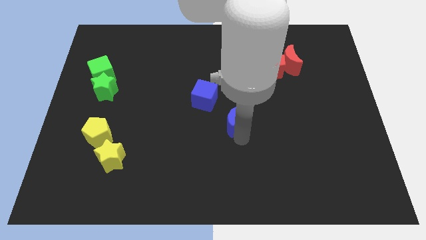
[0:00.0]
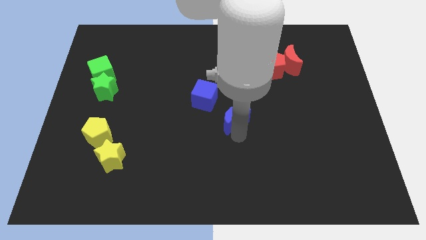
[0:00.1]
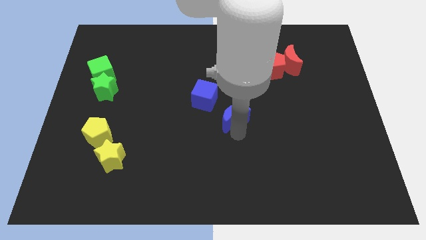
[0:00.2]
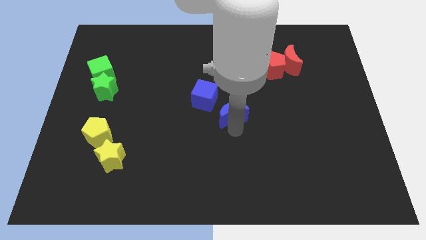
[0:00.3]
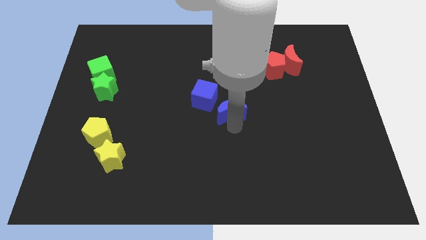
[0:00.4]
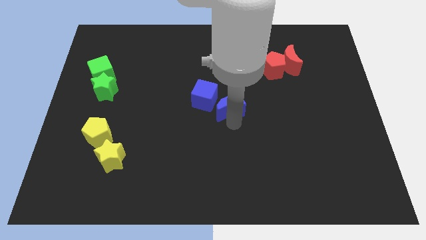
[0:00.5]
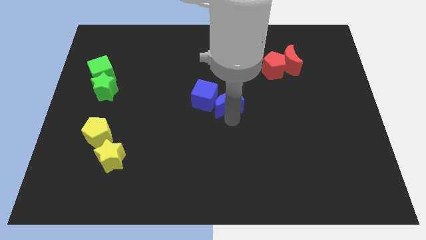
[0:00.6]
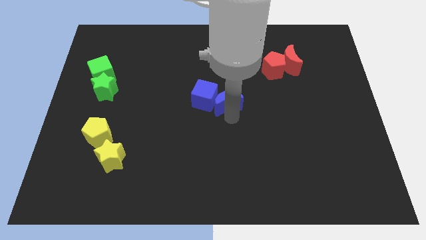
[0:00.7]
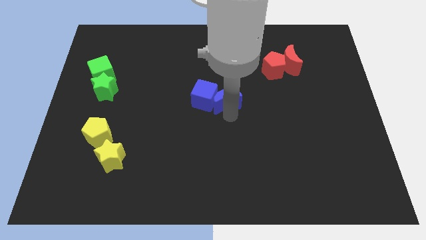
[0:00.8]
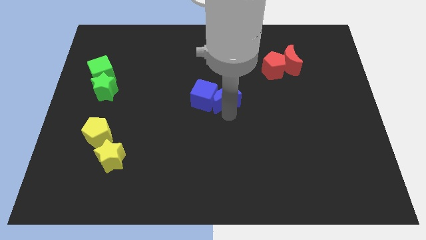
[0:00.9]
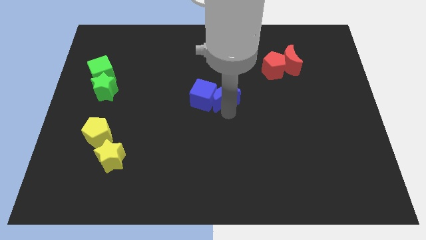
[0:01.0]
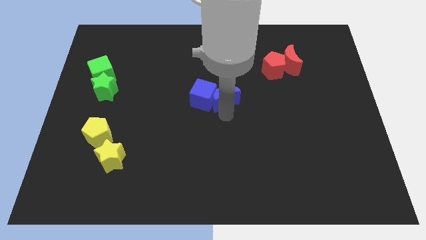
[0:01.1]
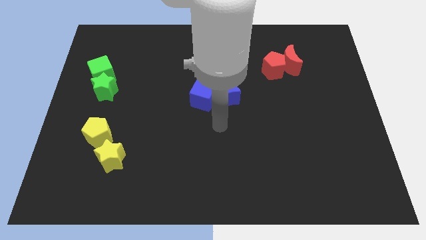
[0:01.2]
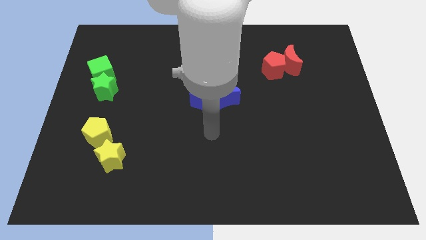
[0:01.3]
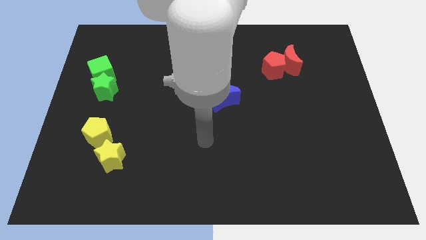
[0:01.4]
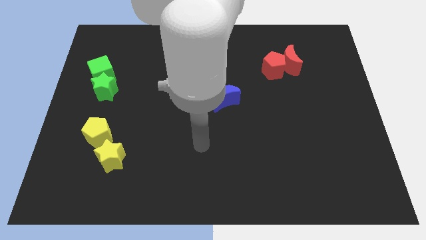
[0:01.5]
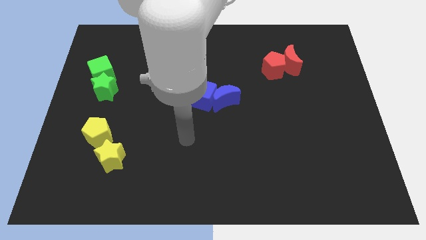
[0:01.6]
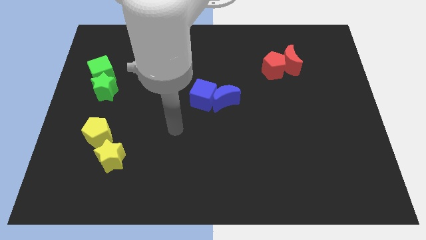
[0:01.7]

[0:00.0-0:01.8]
place the blue moon at the right side of the blue cube

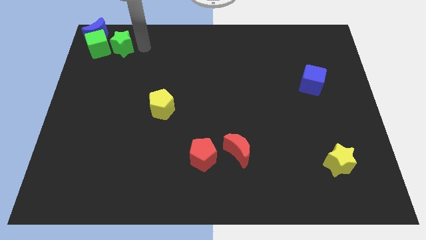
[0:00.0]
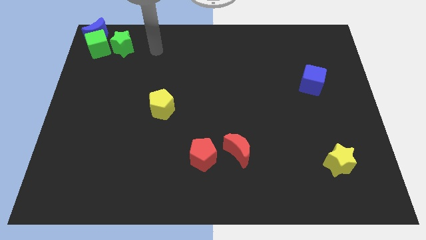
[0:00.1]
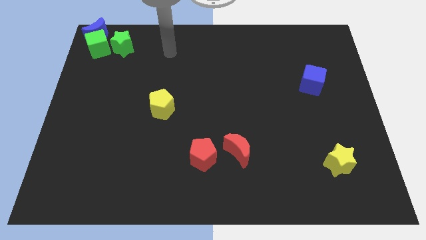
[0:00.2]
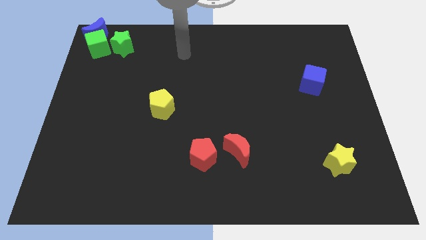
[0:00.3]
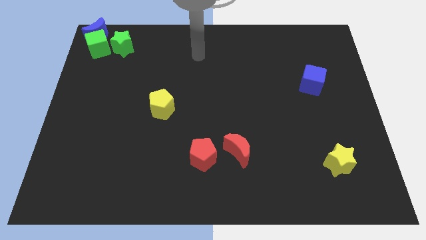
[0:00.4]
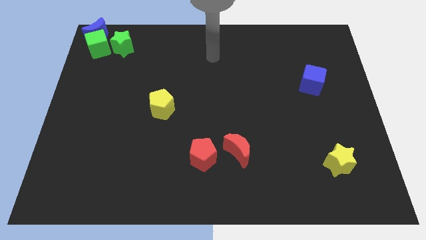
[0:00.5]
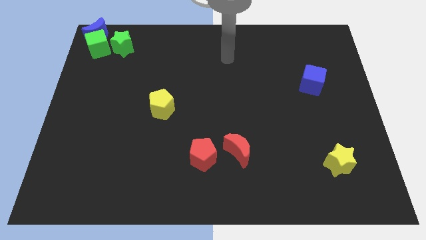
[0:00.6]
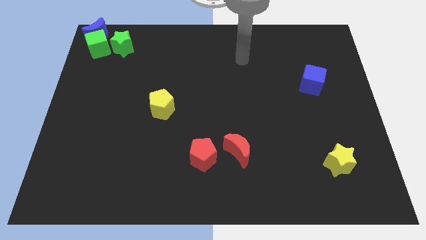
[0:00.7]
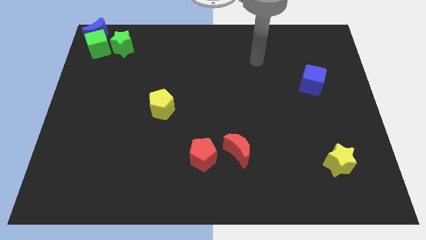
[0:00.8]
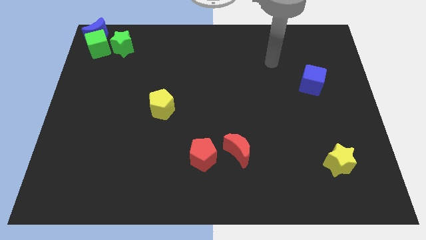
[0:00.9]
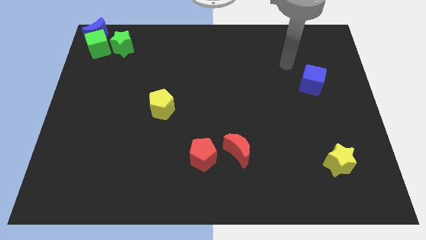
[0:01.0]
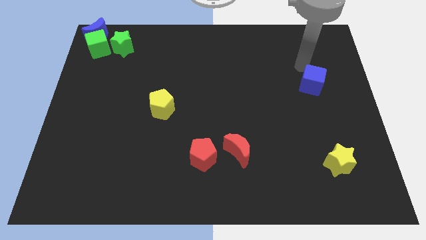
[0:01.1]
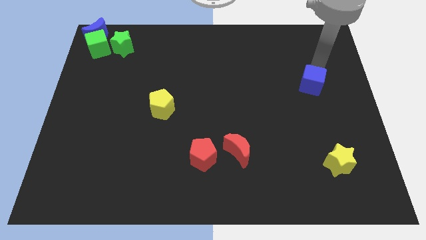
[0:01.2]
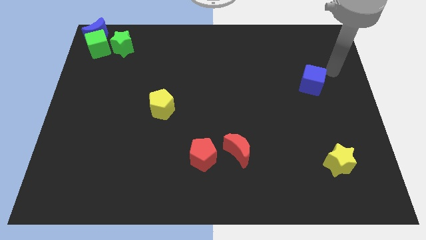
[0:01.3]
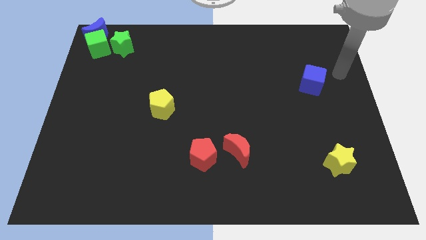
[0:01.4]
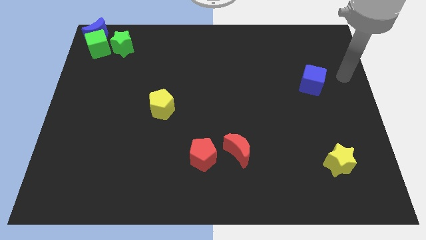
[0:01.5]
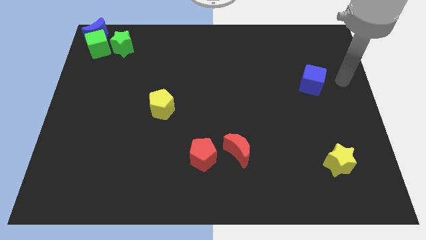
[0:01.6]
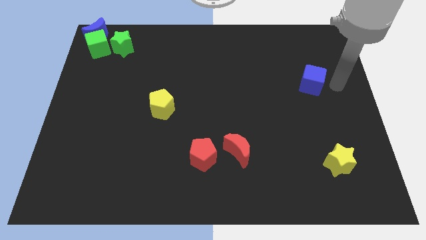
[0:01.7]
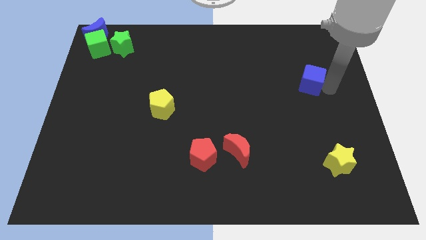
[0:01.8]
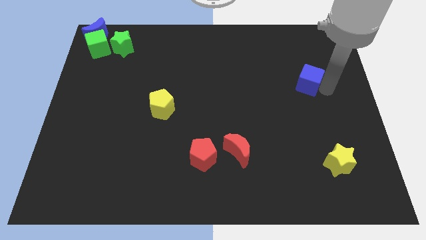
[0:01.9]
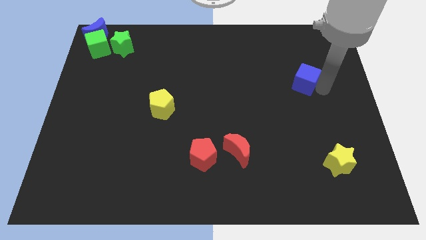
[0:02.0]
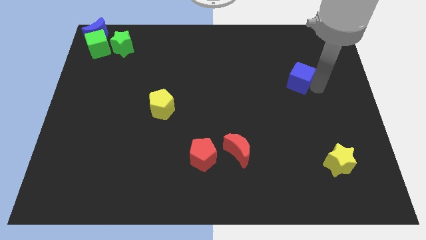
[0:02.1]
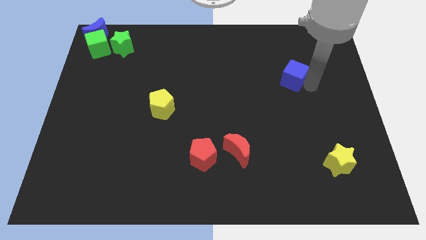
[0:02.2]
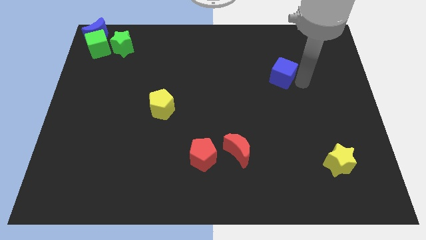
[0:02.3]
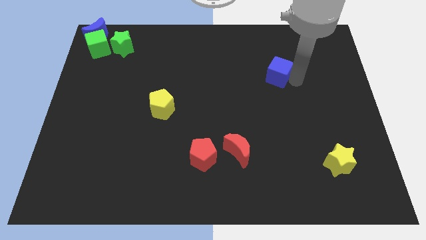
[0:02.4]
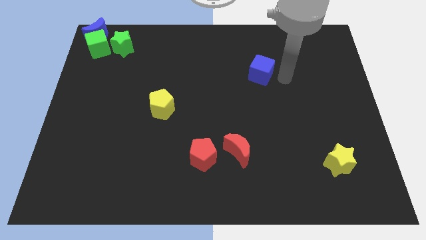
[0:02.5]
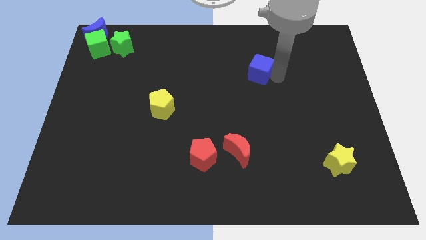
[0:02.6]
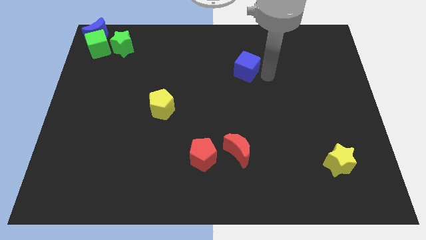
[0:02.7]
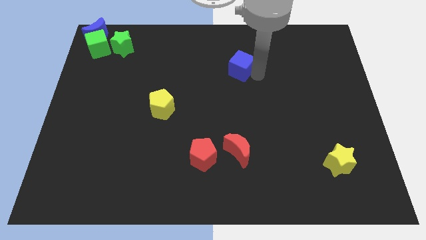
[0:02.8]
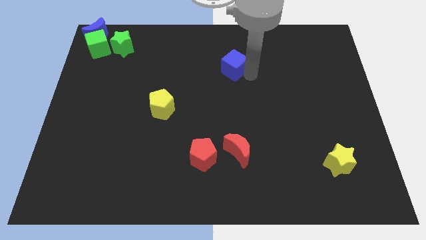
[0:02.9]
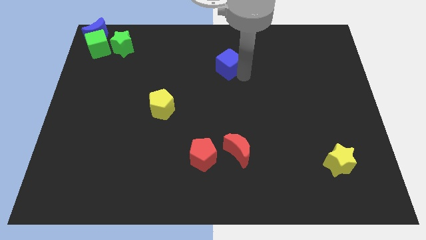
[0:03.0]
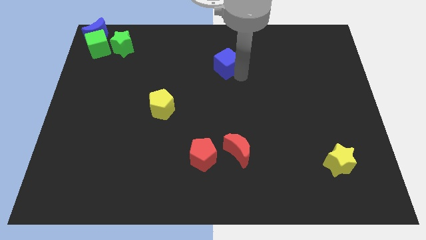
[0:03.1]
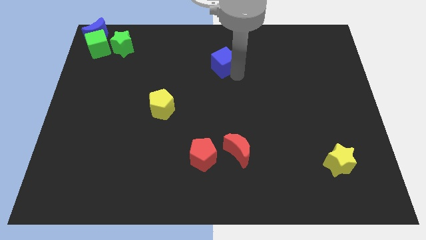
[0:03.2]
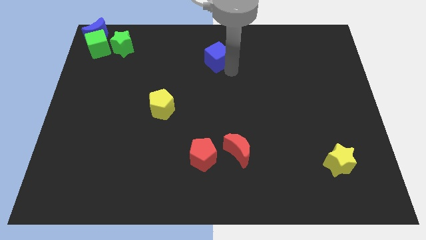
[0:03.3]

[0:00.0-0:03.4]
move the blue cube to the top center of the board

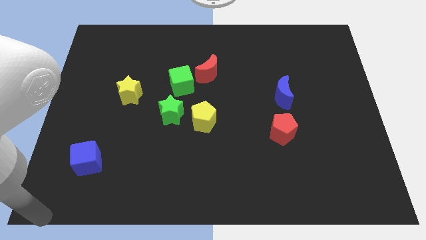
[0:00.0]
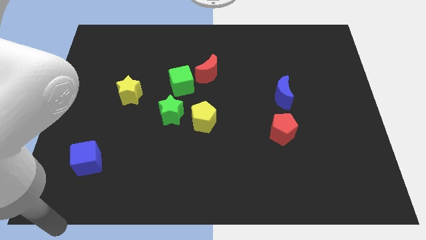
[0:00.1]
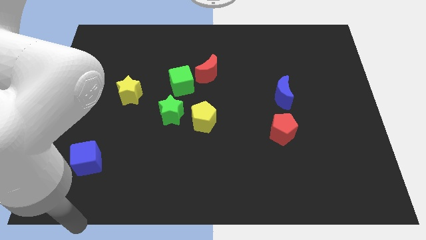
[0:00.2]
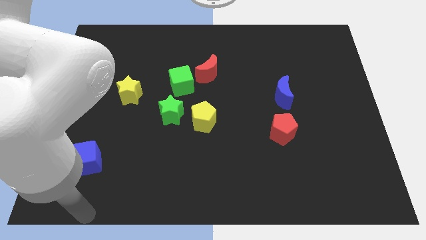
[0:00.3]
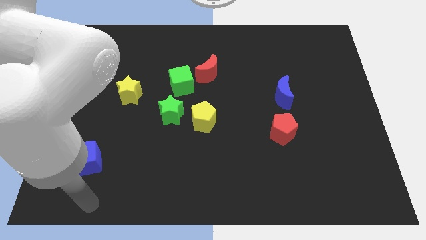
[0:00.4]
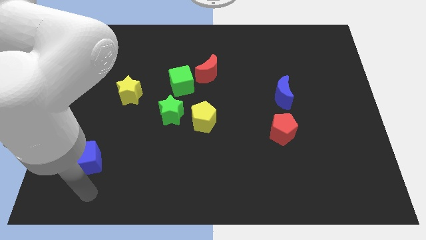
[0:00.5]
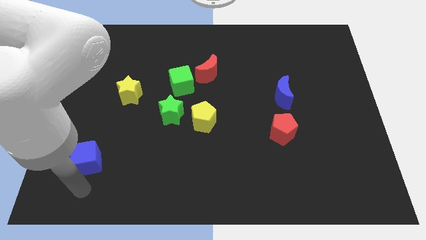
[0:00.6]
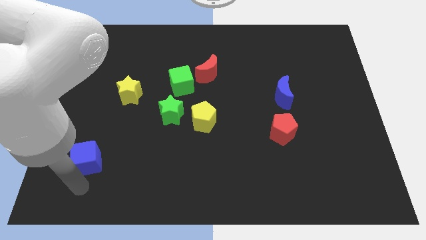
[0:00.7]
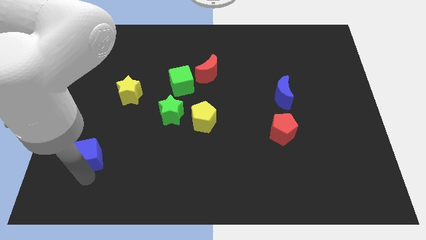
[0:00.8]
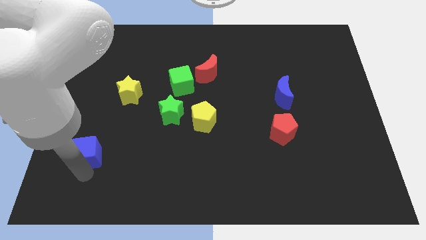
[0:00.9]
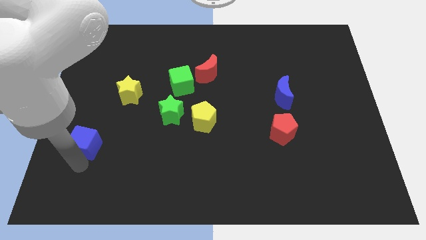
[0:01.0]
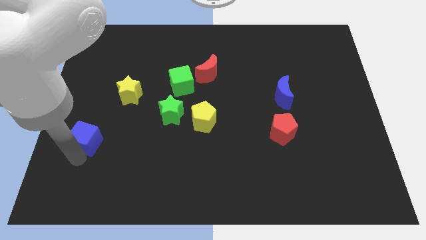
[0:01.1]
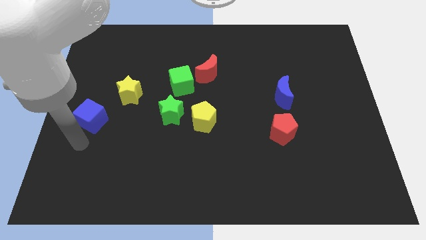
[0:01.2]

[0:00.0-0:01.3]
push the blue cube upwards

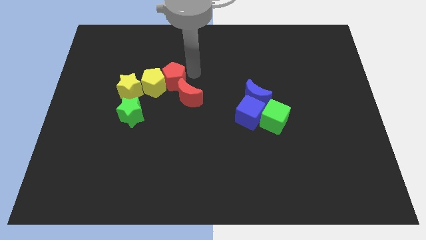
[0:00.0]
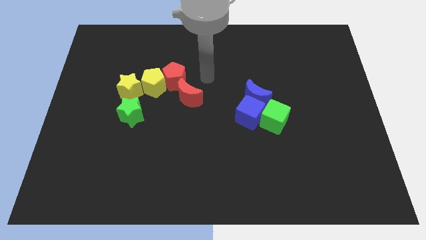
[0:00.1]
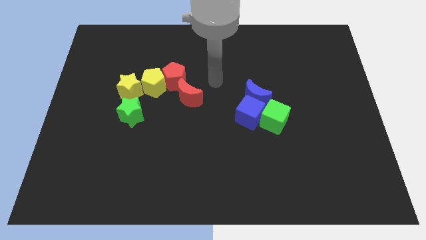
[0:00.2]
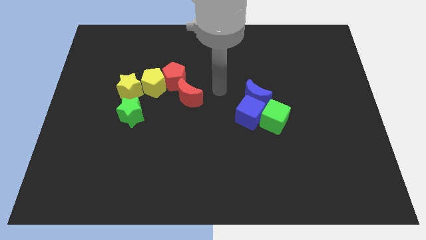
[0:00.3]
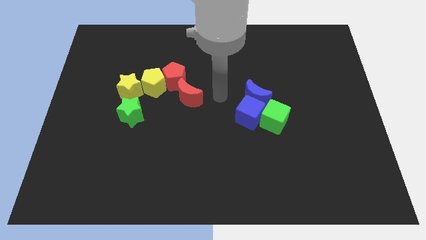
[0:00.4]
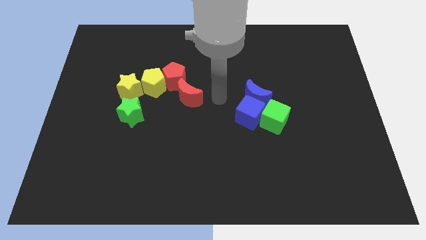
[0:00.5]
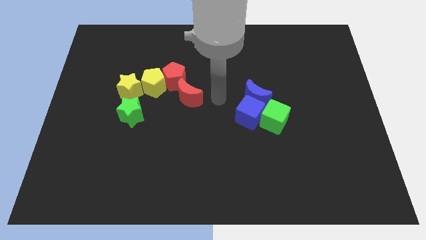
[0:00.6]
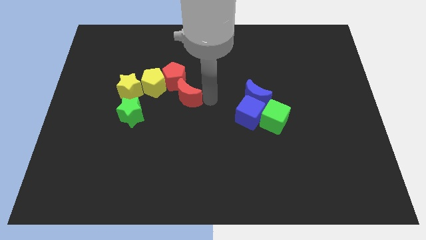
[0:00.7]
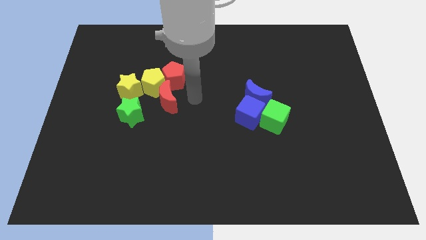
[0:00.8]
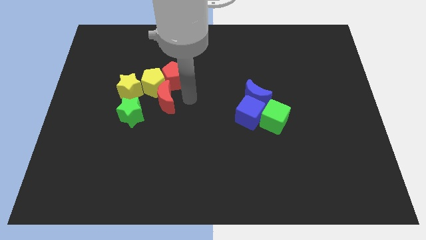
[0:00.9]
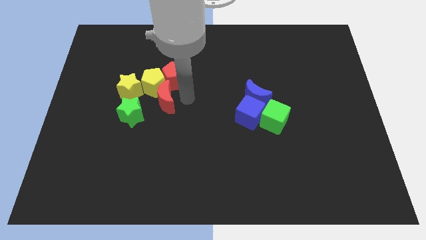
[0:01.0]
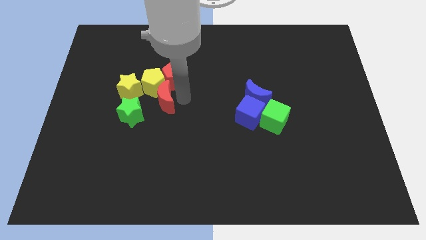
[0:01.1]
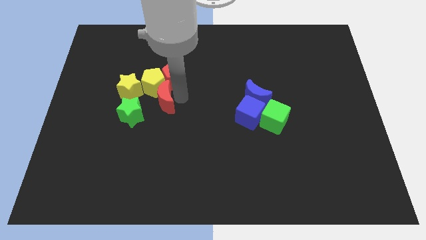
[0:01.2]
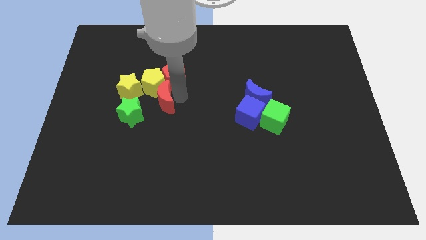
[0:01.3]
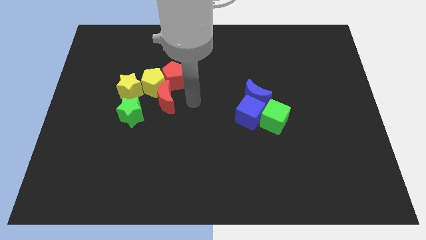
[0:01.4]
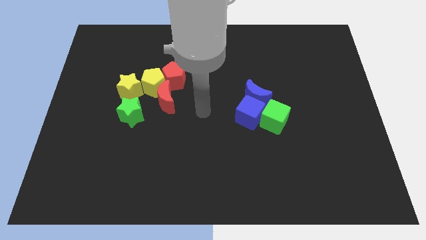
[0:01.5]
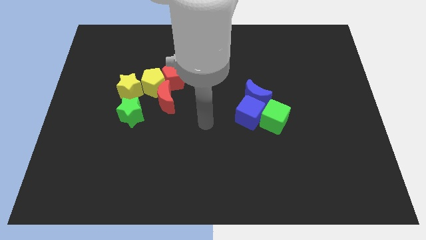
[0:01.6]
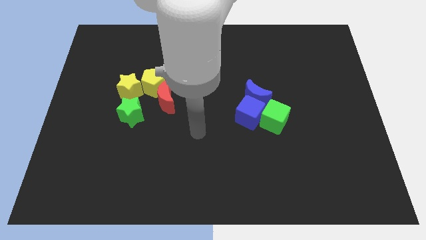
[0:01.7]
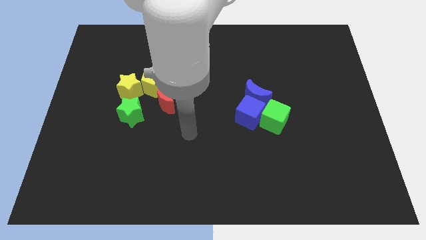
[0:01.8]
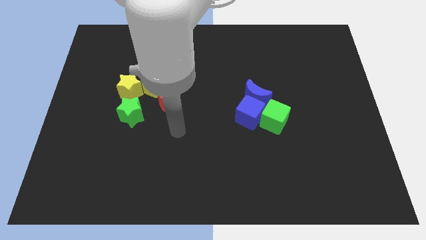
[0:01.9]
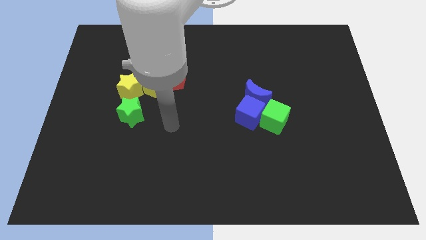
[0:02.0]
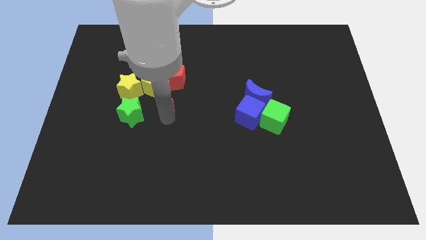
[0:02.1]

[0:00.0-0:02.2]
move the red moon slightly to the left

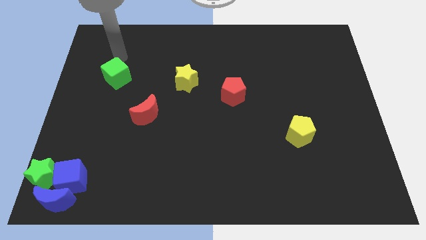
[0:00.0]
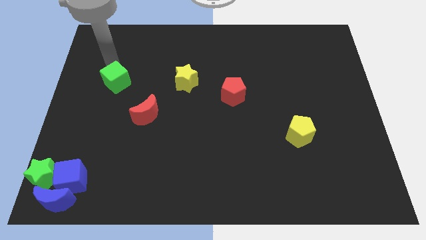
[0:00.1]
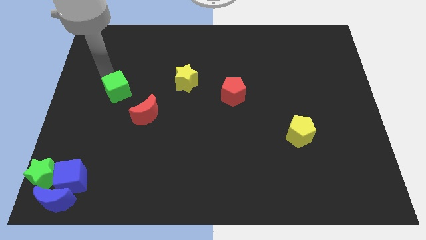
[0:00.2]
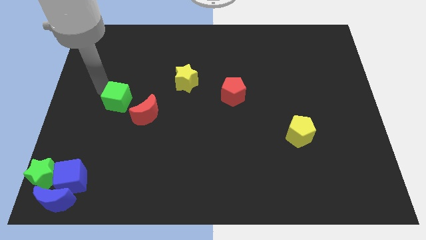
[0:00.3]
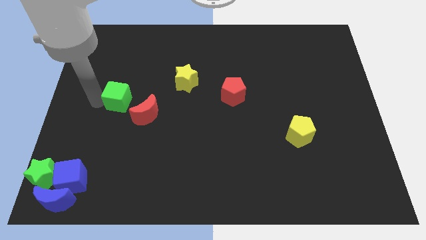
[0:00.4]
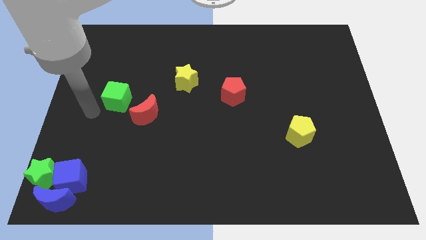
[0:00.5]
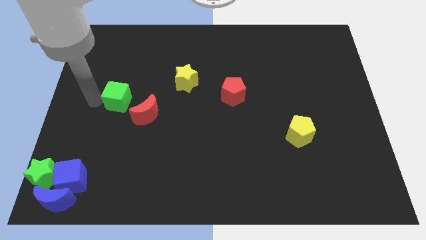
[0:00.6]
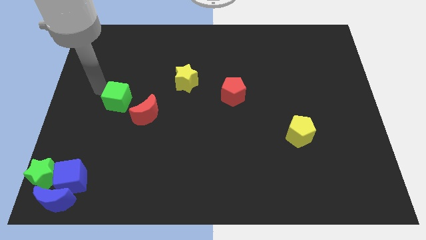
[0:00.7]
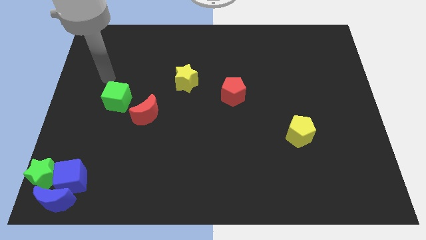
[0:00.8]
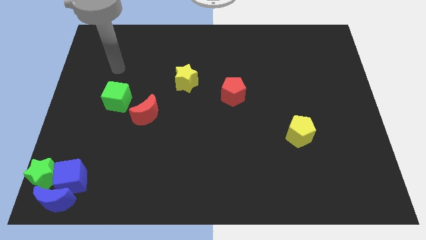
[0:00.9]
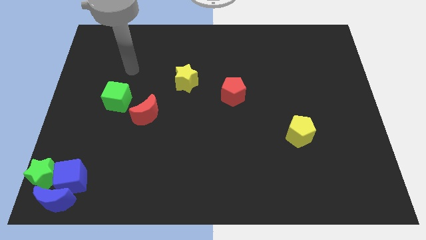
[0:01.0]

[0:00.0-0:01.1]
move green cube towards red moon
